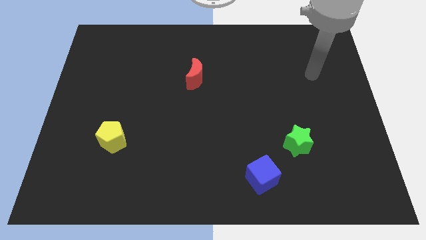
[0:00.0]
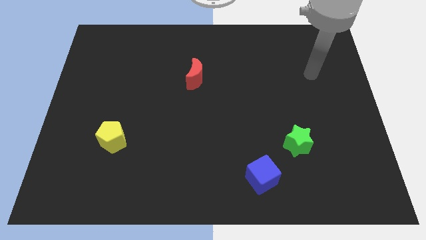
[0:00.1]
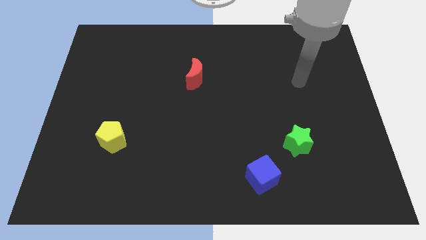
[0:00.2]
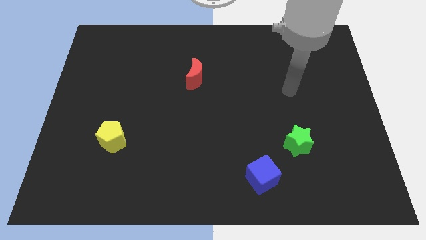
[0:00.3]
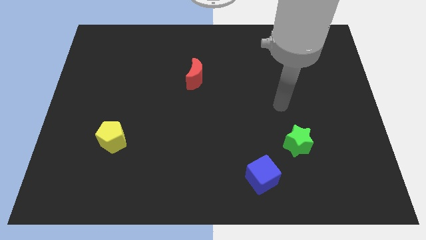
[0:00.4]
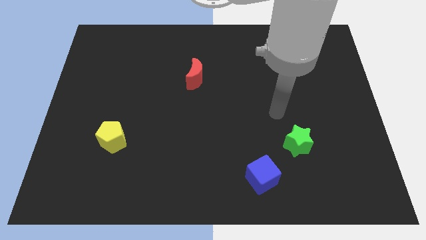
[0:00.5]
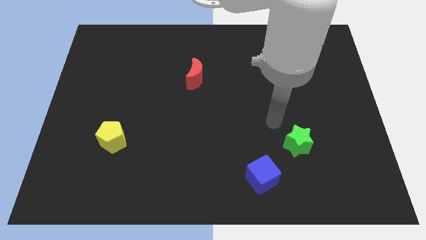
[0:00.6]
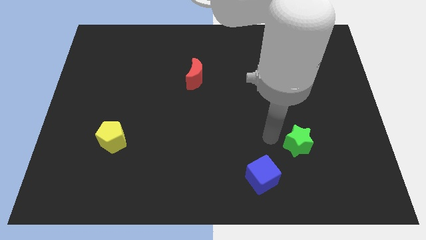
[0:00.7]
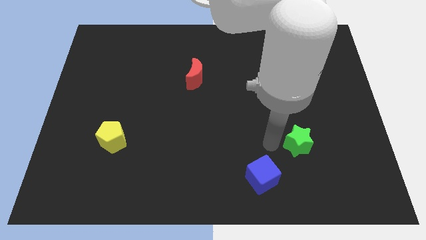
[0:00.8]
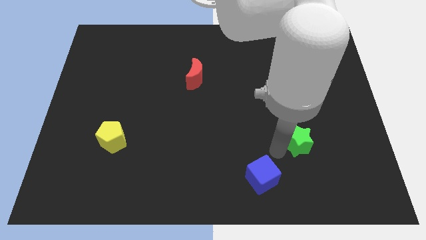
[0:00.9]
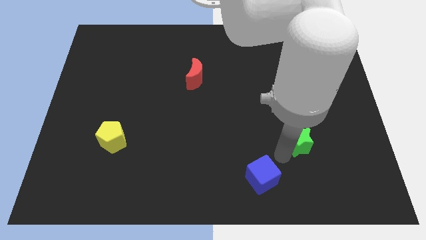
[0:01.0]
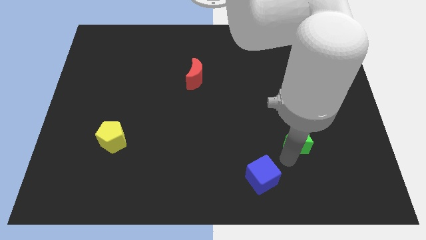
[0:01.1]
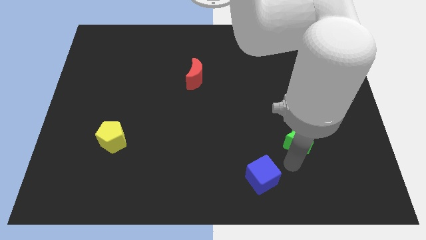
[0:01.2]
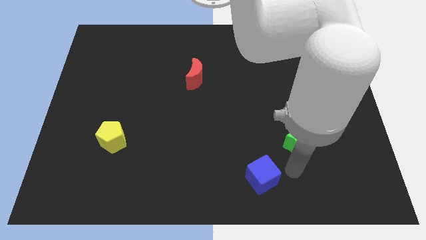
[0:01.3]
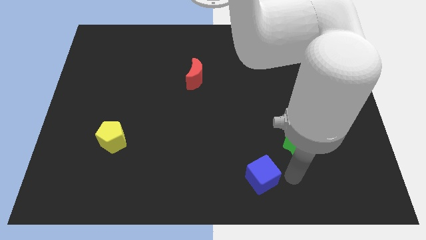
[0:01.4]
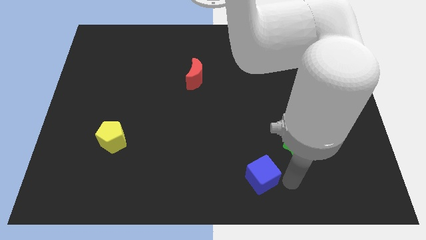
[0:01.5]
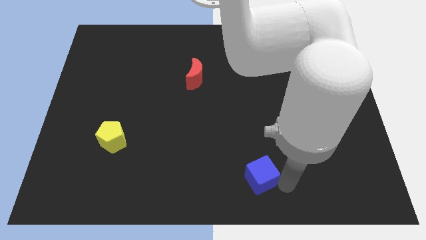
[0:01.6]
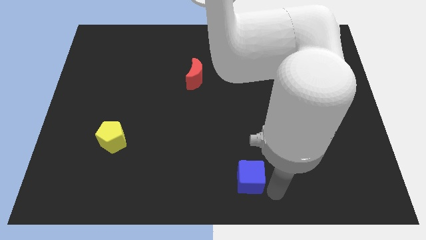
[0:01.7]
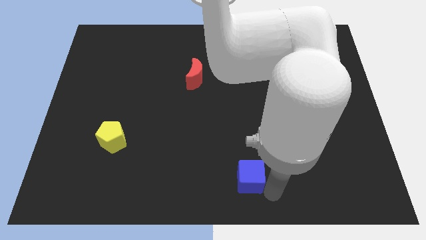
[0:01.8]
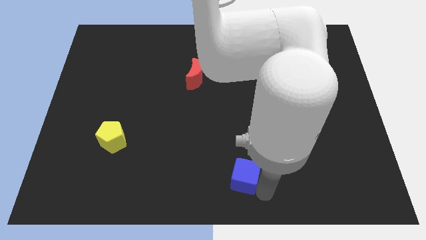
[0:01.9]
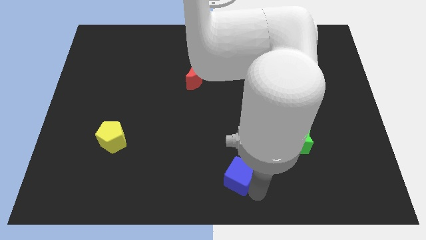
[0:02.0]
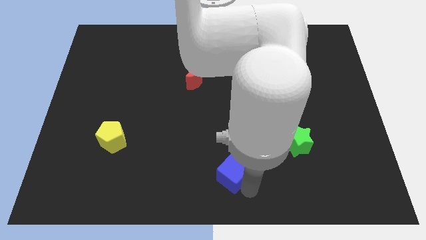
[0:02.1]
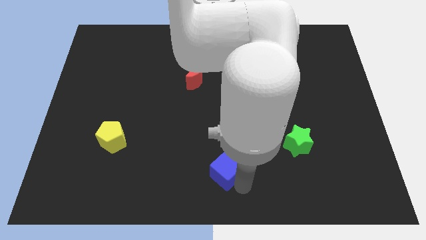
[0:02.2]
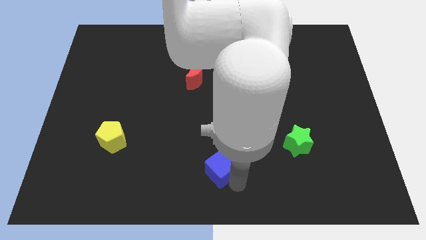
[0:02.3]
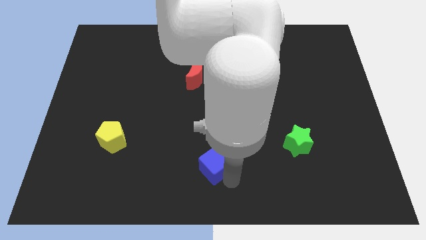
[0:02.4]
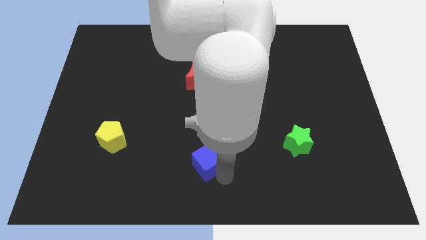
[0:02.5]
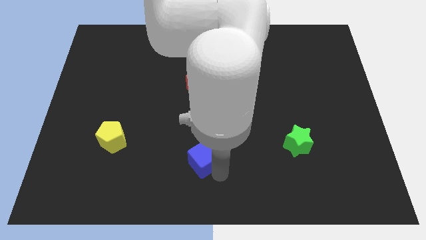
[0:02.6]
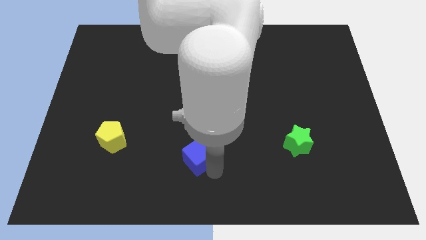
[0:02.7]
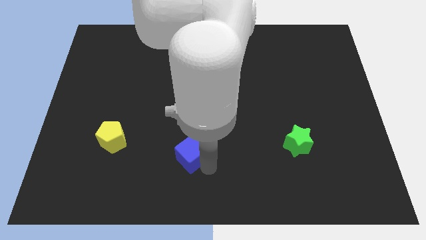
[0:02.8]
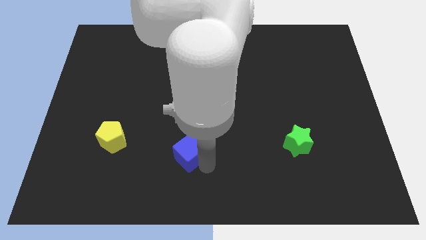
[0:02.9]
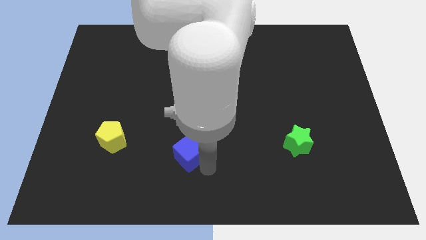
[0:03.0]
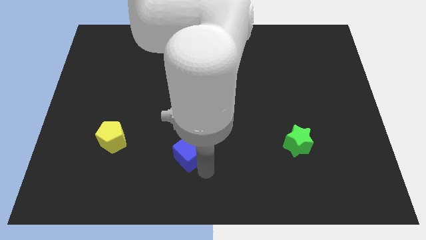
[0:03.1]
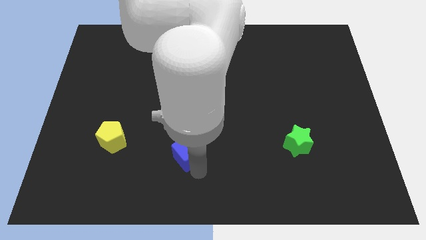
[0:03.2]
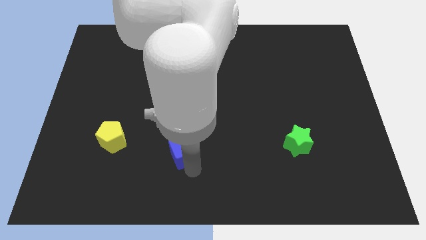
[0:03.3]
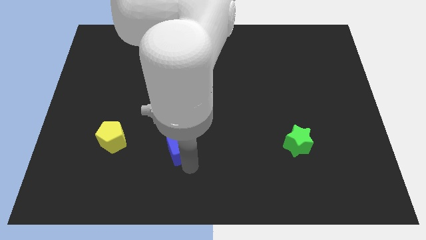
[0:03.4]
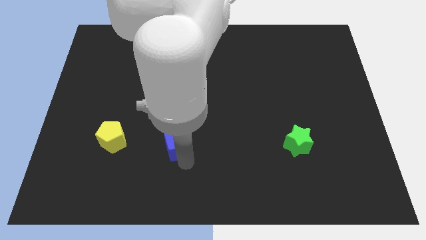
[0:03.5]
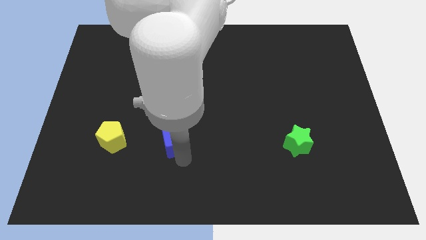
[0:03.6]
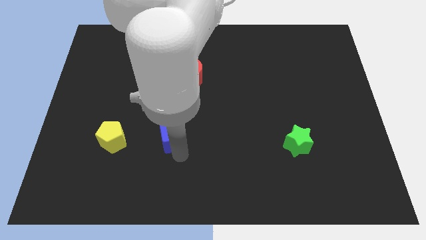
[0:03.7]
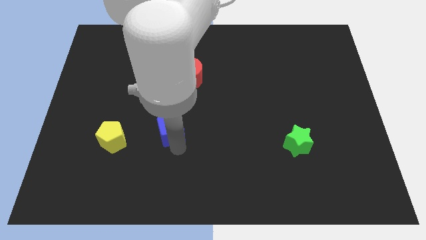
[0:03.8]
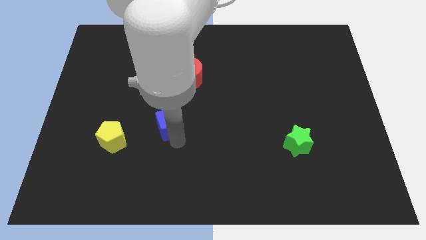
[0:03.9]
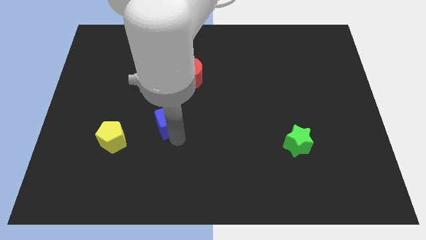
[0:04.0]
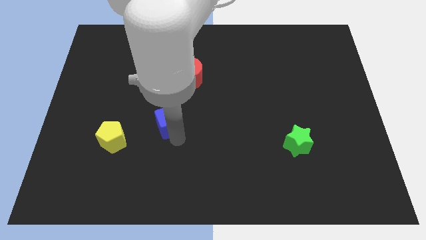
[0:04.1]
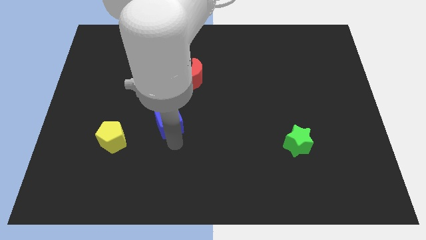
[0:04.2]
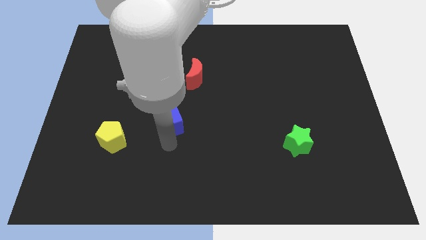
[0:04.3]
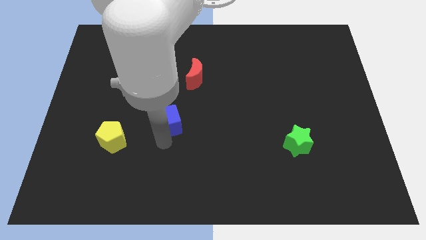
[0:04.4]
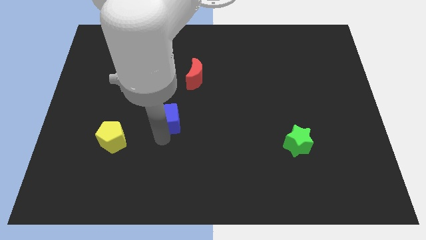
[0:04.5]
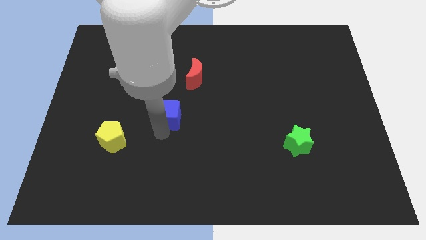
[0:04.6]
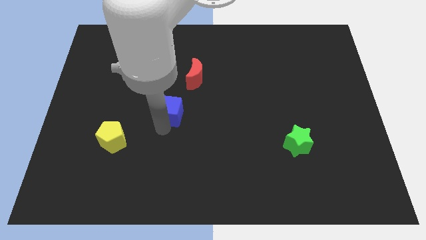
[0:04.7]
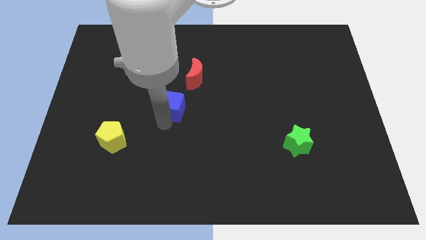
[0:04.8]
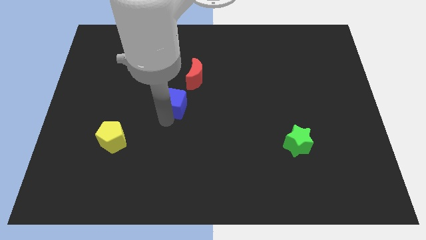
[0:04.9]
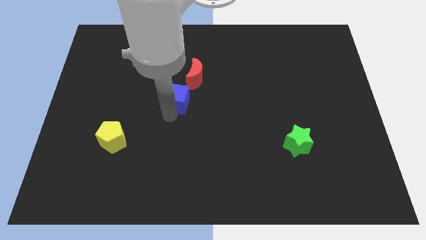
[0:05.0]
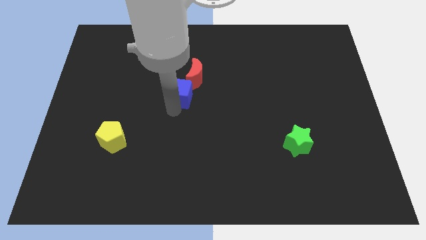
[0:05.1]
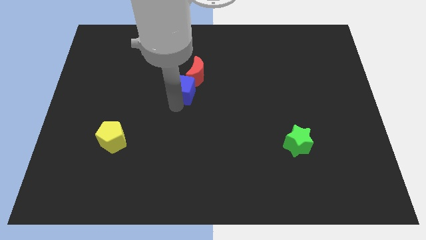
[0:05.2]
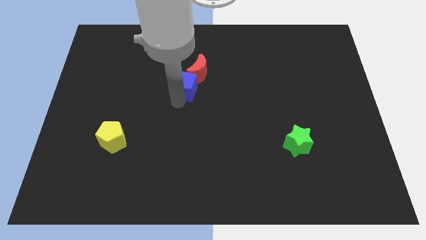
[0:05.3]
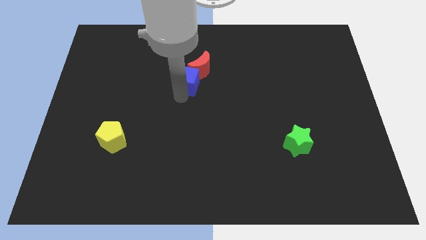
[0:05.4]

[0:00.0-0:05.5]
slide the blue block towards the red moon

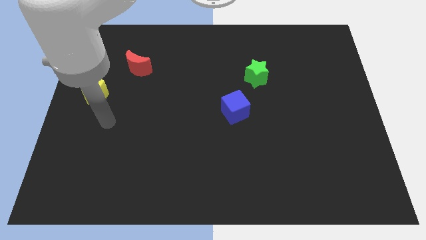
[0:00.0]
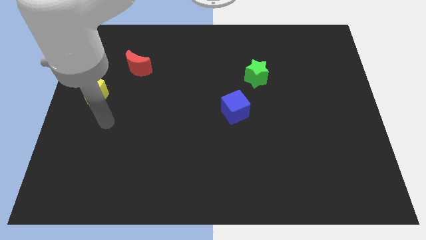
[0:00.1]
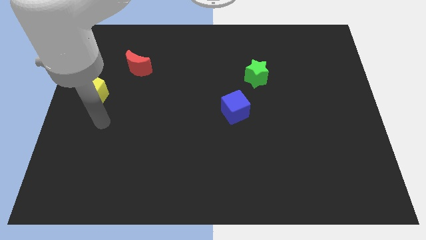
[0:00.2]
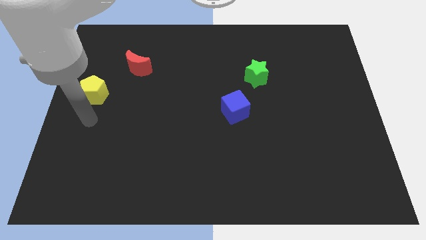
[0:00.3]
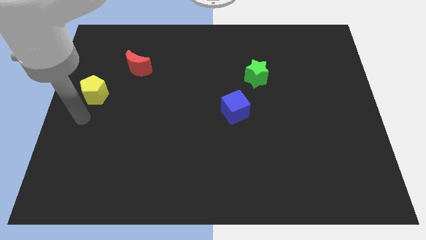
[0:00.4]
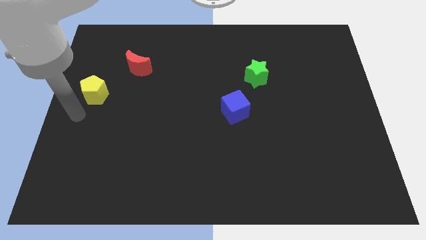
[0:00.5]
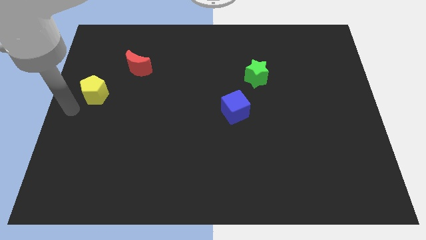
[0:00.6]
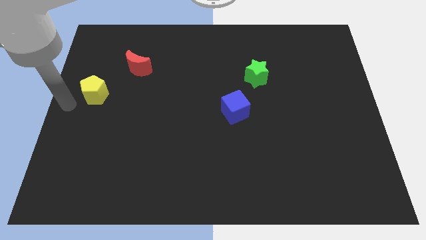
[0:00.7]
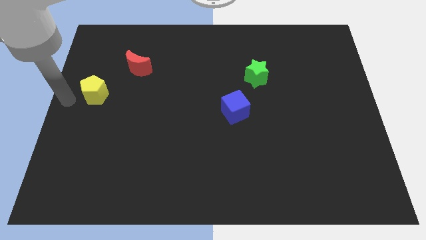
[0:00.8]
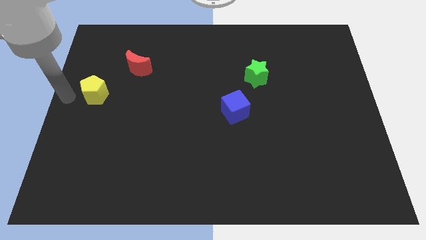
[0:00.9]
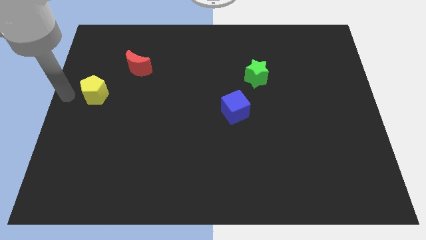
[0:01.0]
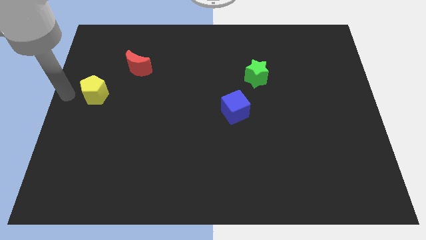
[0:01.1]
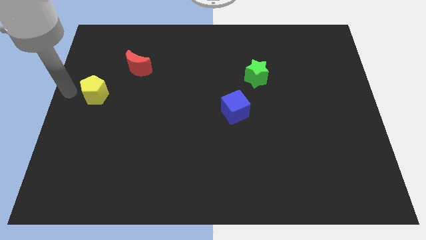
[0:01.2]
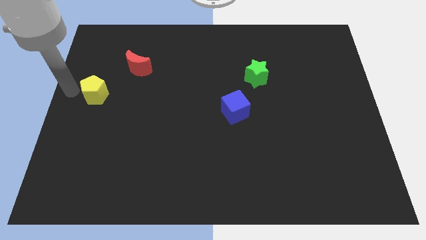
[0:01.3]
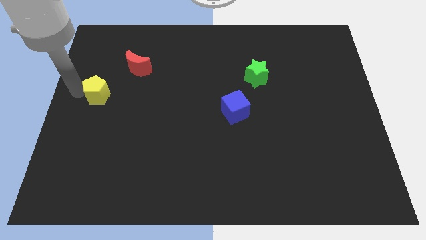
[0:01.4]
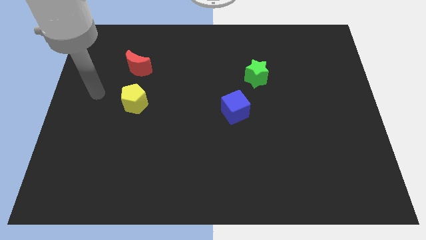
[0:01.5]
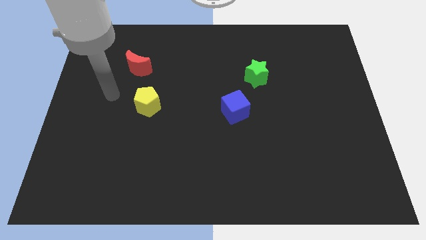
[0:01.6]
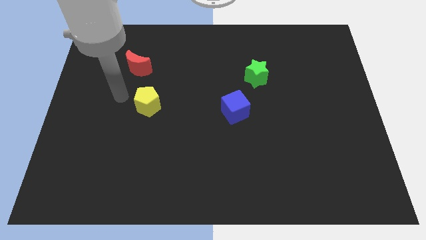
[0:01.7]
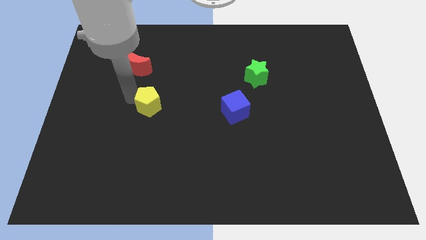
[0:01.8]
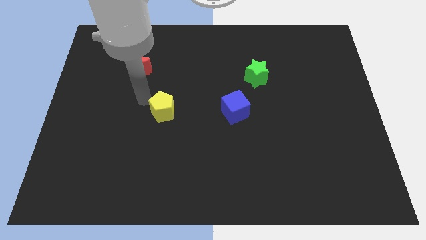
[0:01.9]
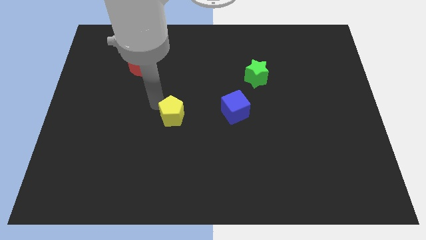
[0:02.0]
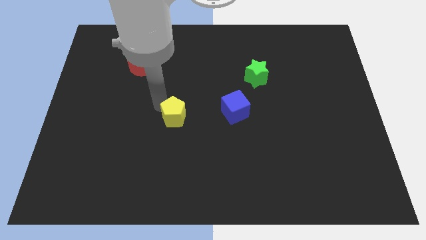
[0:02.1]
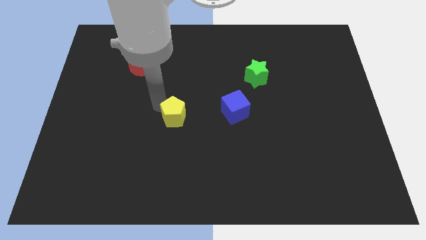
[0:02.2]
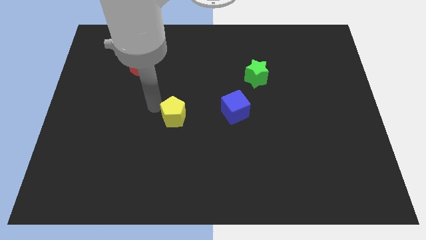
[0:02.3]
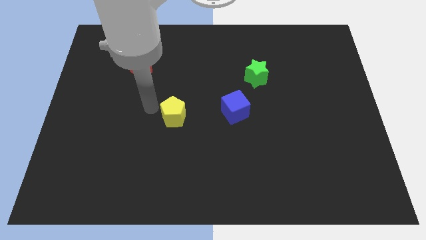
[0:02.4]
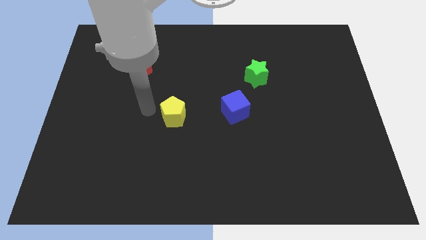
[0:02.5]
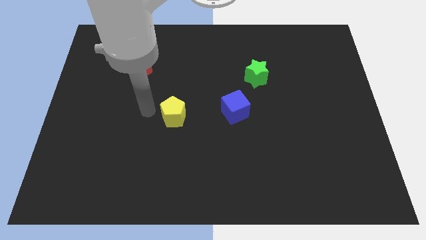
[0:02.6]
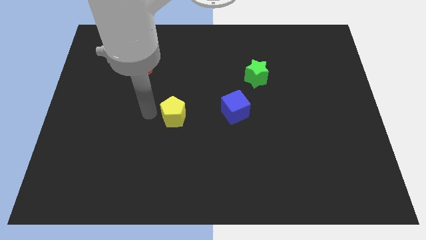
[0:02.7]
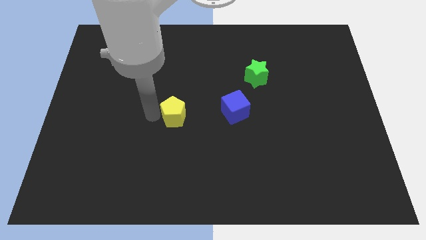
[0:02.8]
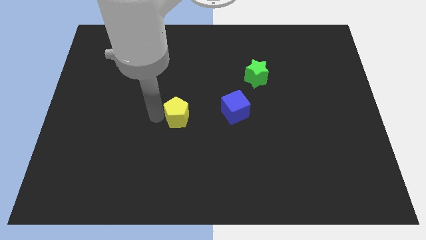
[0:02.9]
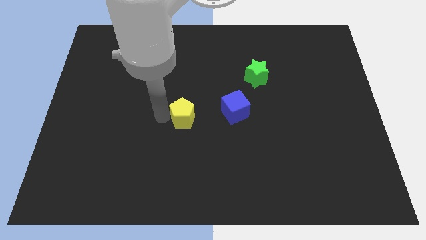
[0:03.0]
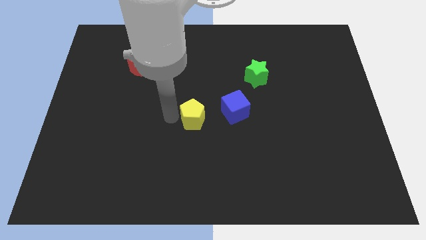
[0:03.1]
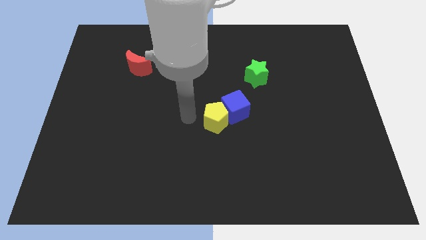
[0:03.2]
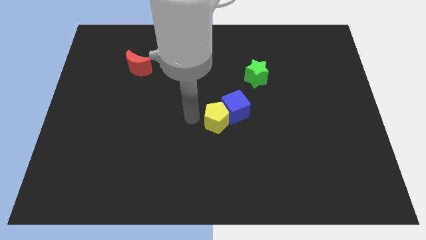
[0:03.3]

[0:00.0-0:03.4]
move the yellow block towards the cube
